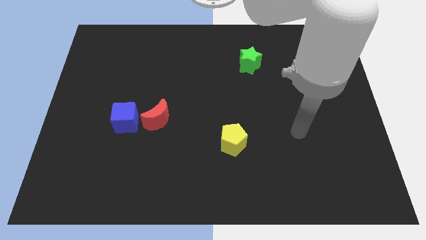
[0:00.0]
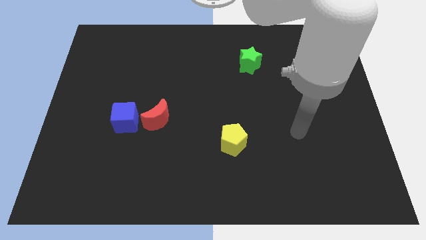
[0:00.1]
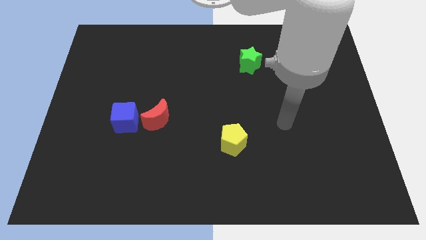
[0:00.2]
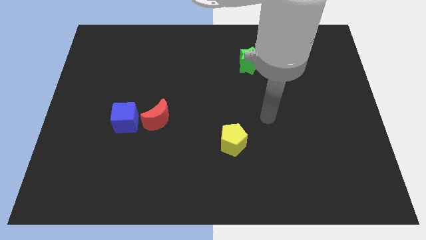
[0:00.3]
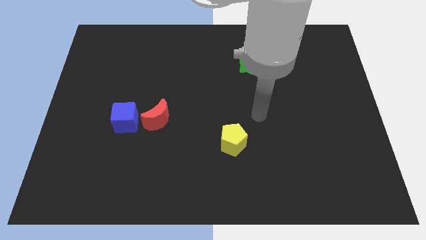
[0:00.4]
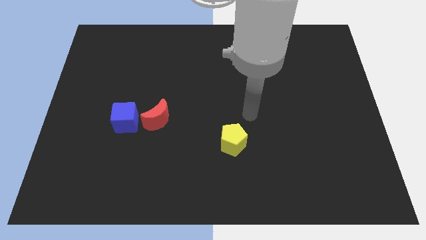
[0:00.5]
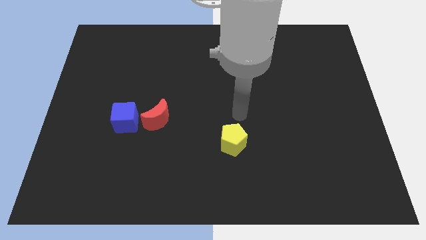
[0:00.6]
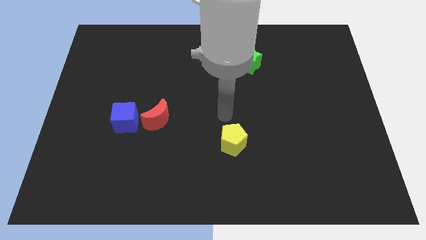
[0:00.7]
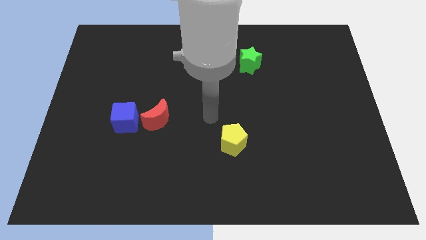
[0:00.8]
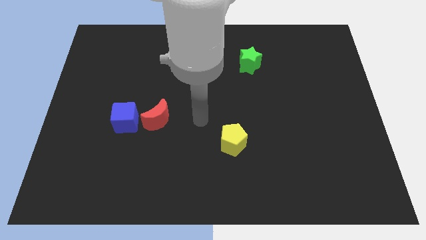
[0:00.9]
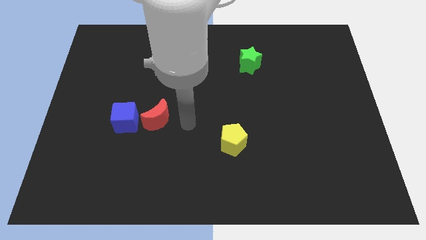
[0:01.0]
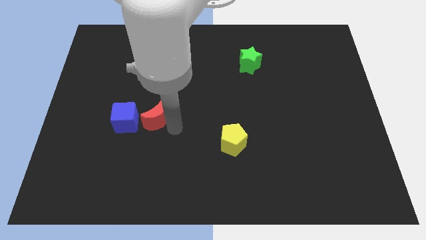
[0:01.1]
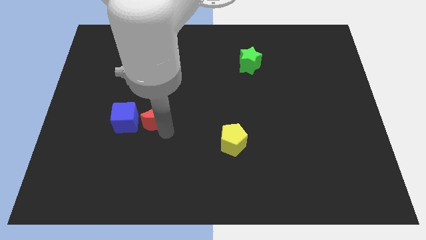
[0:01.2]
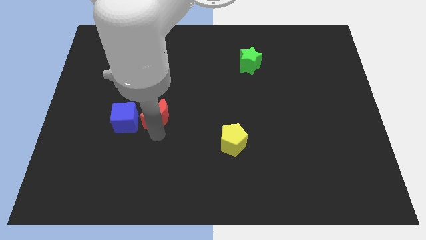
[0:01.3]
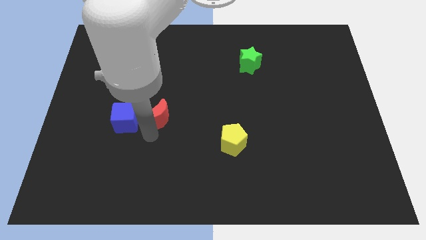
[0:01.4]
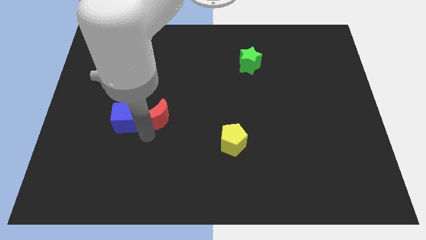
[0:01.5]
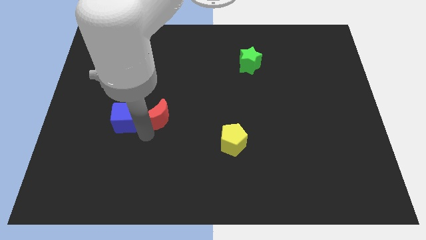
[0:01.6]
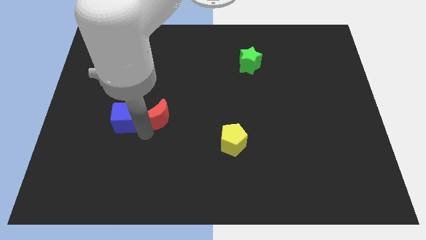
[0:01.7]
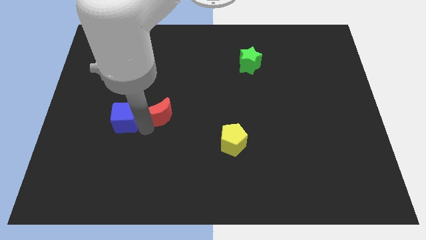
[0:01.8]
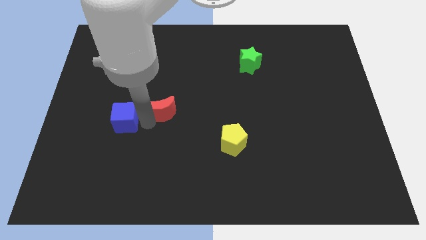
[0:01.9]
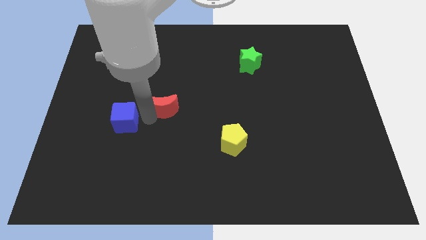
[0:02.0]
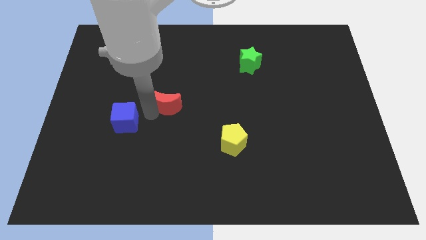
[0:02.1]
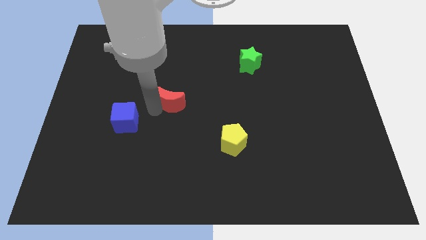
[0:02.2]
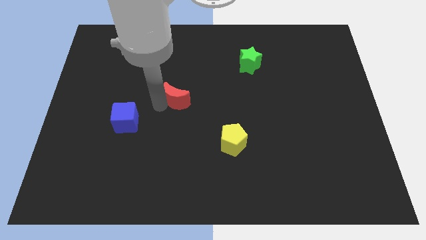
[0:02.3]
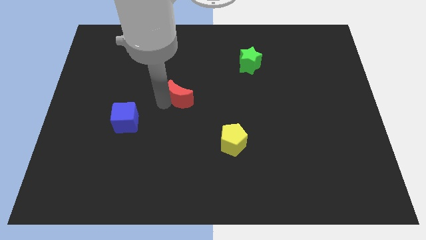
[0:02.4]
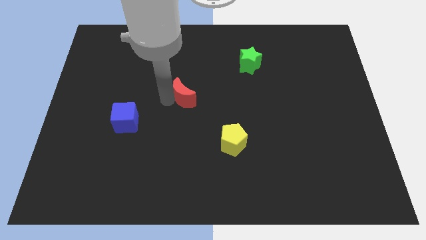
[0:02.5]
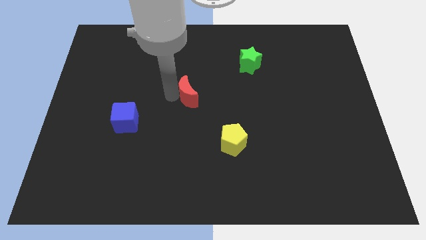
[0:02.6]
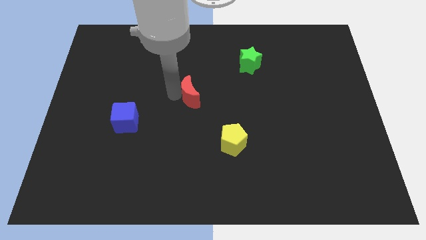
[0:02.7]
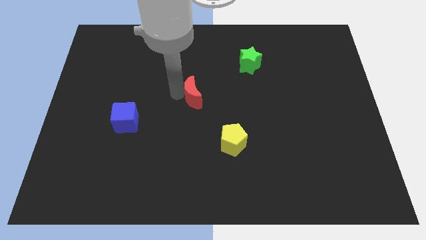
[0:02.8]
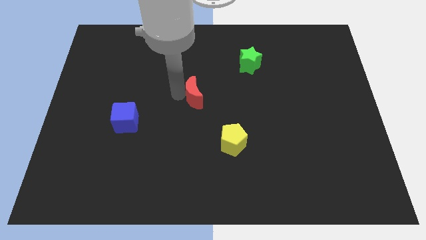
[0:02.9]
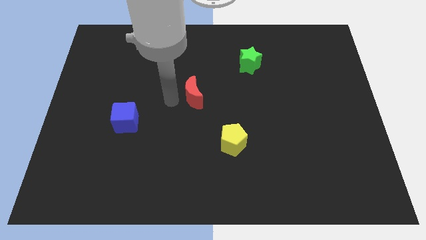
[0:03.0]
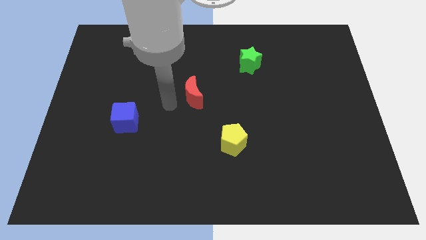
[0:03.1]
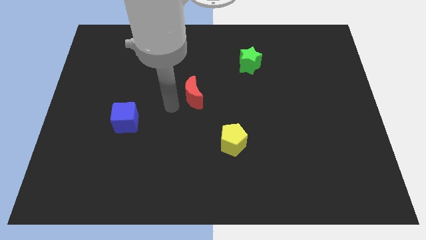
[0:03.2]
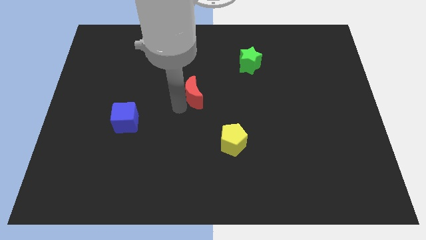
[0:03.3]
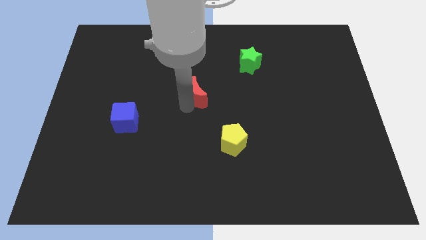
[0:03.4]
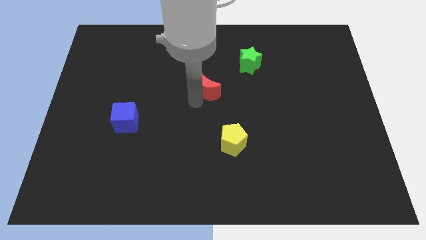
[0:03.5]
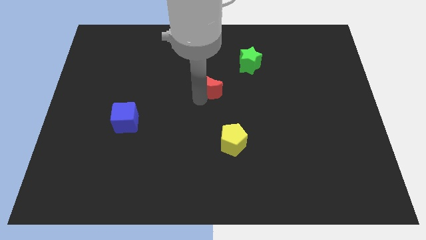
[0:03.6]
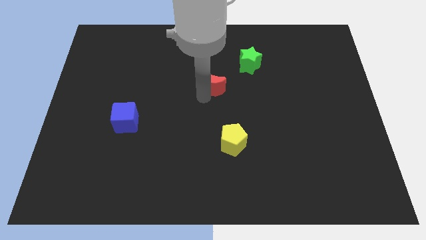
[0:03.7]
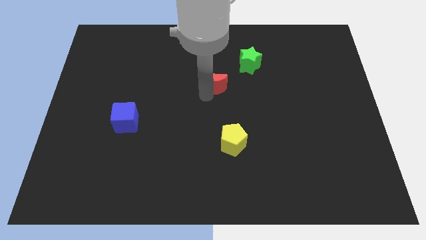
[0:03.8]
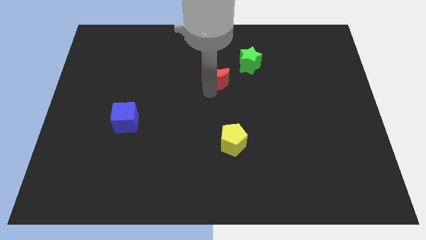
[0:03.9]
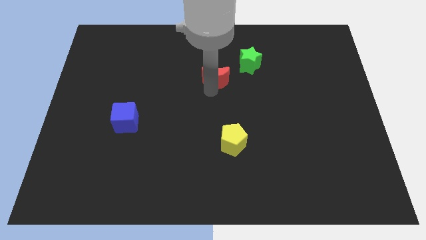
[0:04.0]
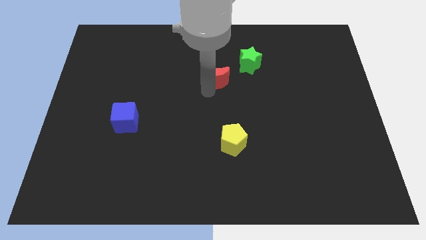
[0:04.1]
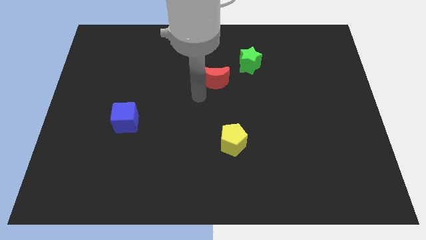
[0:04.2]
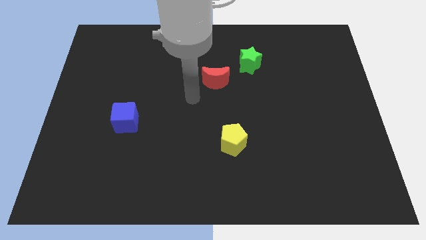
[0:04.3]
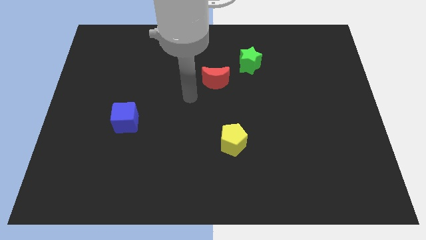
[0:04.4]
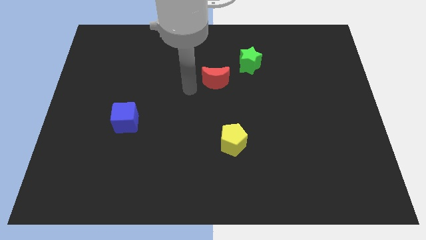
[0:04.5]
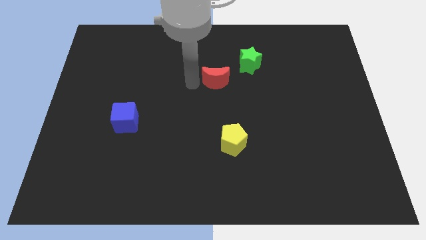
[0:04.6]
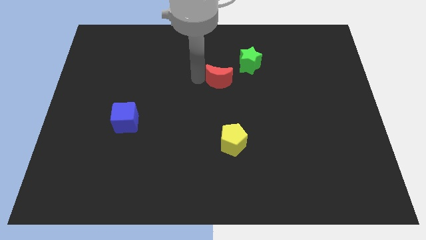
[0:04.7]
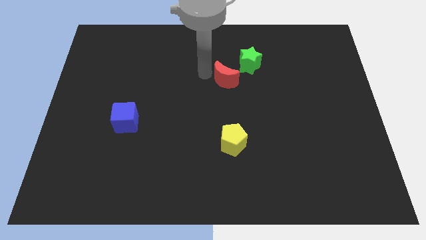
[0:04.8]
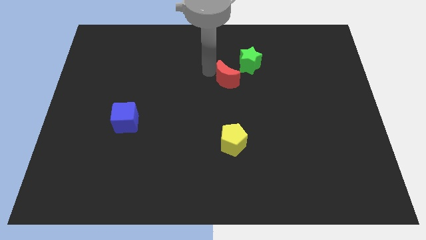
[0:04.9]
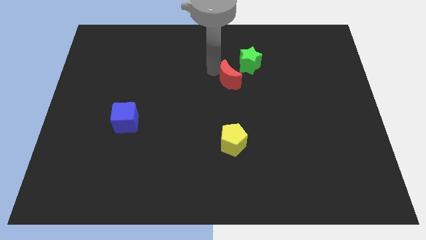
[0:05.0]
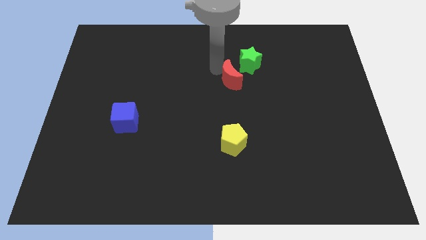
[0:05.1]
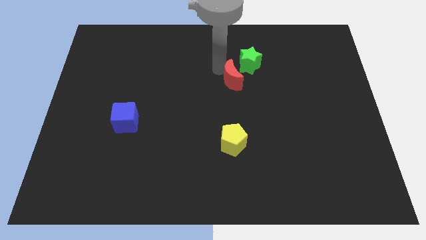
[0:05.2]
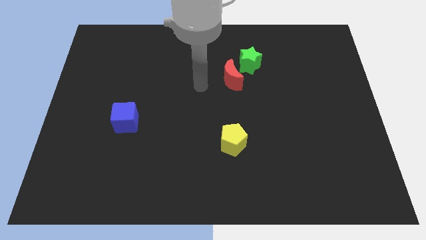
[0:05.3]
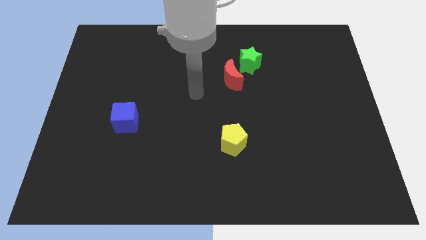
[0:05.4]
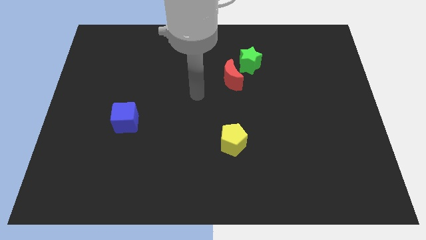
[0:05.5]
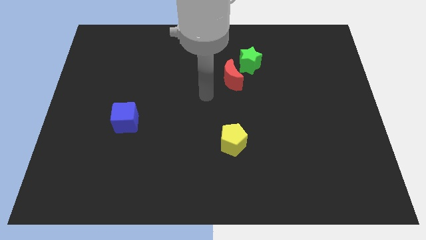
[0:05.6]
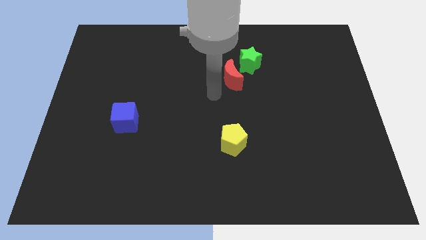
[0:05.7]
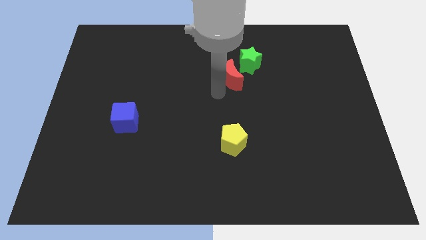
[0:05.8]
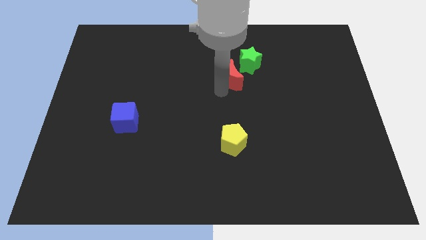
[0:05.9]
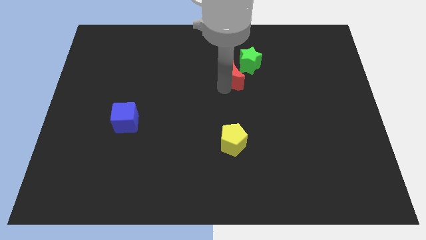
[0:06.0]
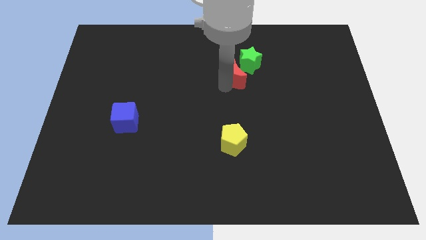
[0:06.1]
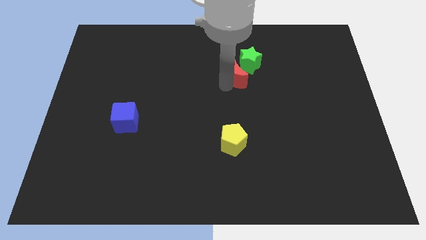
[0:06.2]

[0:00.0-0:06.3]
slide the red block to the green star

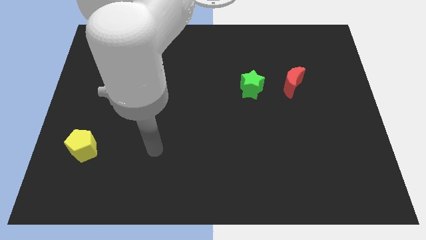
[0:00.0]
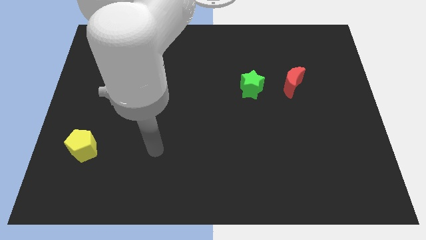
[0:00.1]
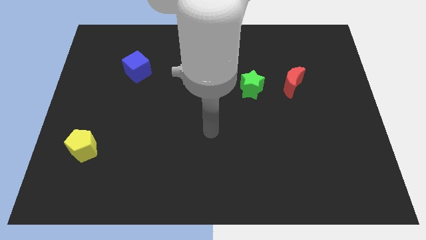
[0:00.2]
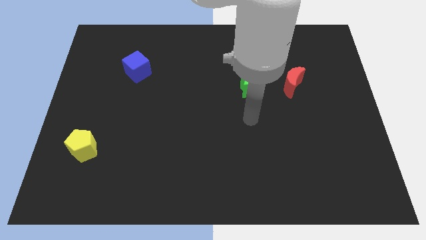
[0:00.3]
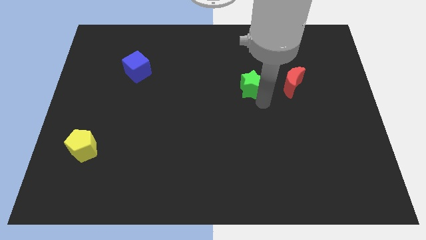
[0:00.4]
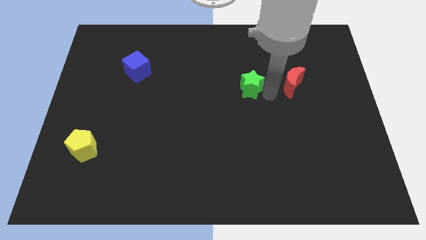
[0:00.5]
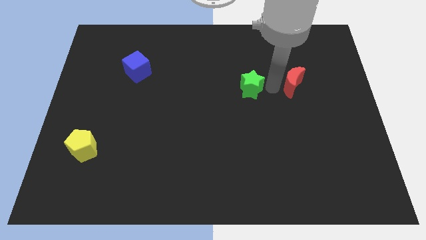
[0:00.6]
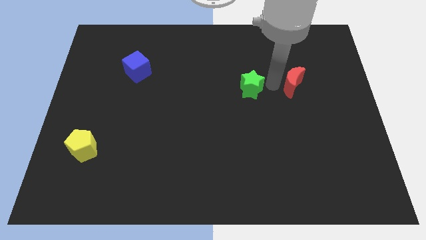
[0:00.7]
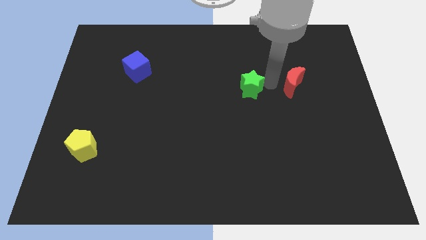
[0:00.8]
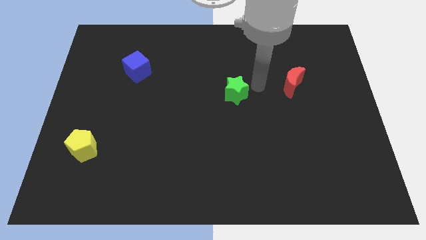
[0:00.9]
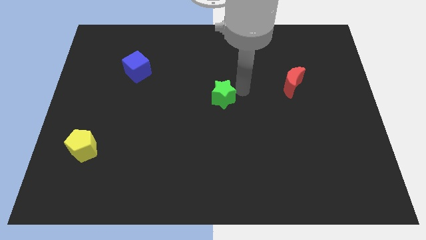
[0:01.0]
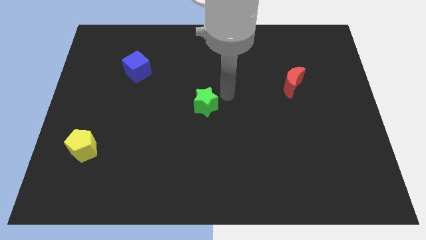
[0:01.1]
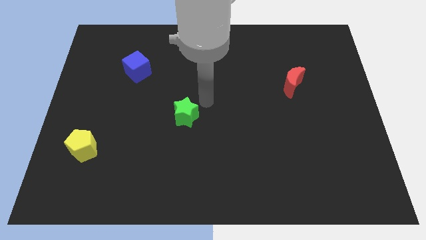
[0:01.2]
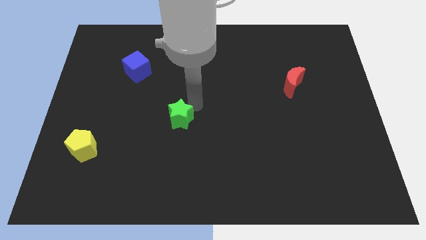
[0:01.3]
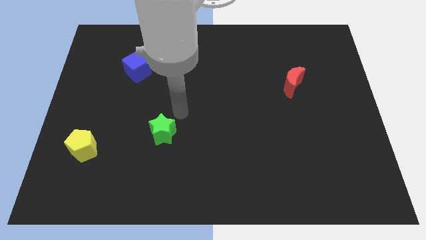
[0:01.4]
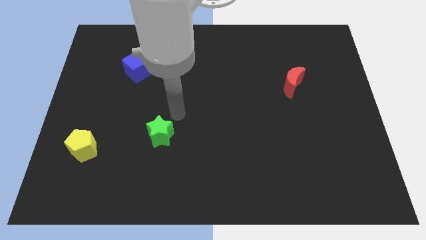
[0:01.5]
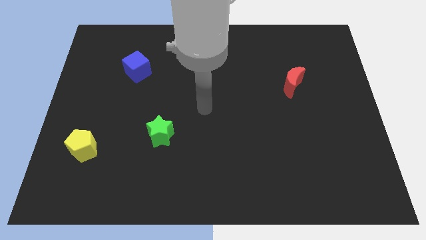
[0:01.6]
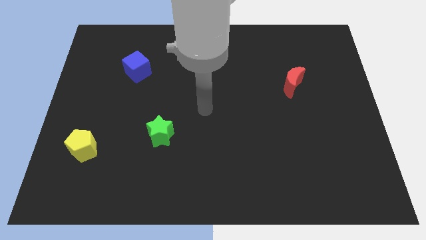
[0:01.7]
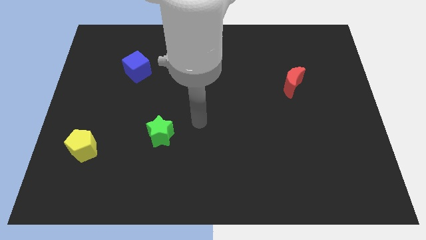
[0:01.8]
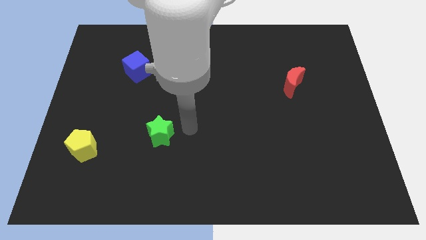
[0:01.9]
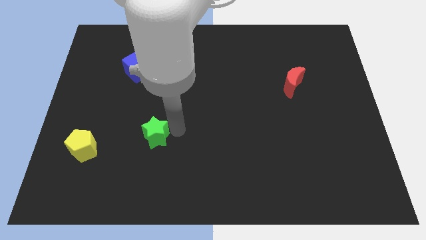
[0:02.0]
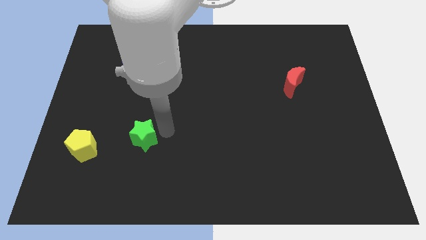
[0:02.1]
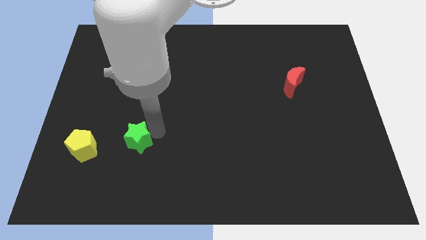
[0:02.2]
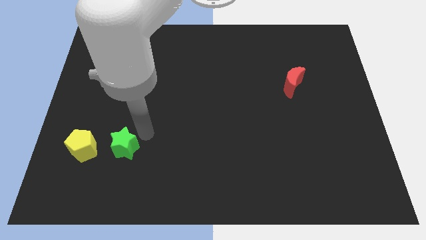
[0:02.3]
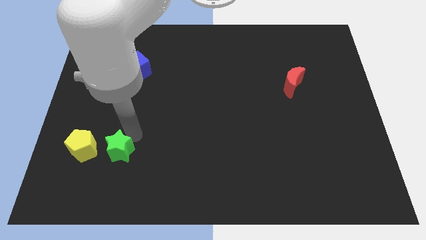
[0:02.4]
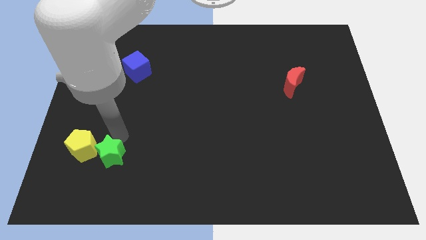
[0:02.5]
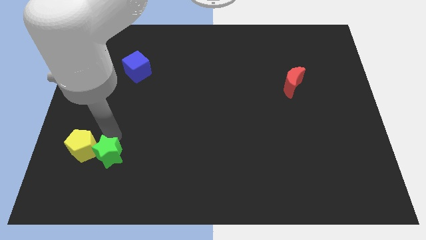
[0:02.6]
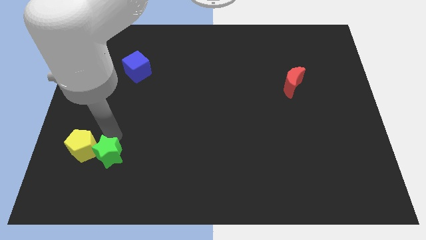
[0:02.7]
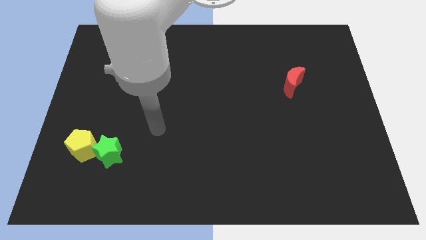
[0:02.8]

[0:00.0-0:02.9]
move the green star close to the yellow block
